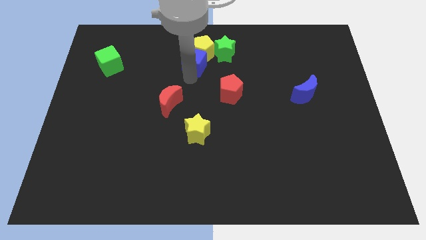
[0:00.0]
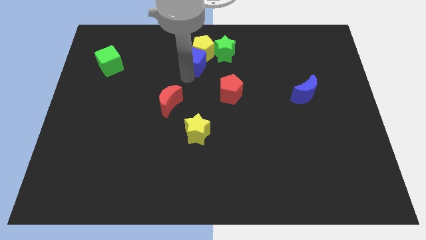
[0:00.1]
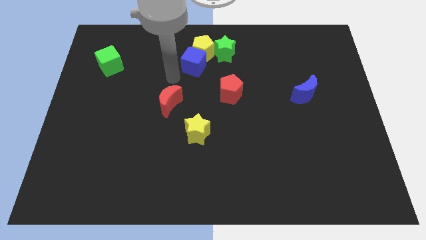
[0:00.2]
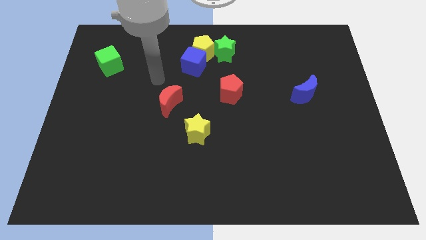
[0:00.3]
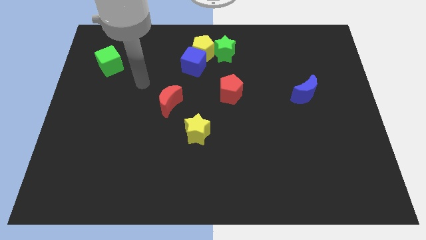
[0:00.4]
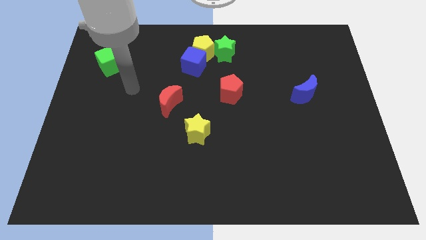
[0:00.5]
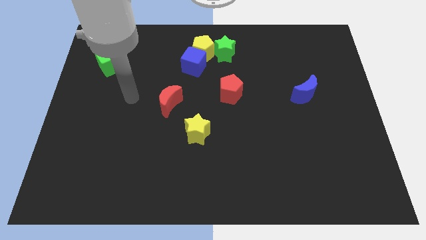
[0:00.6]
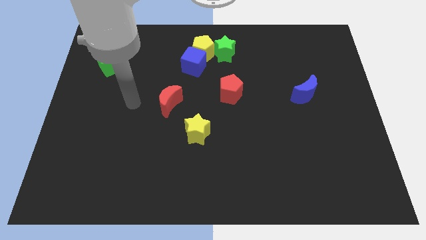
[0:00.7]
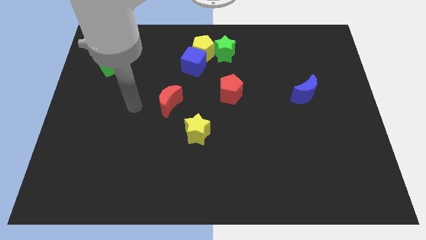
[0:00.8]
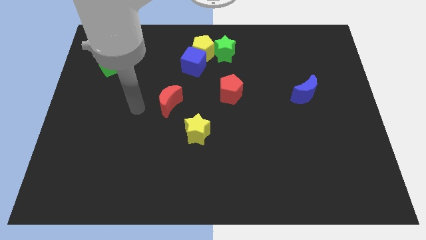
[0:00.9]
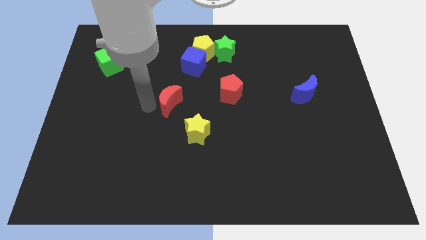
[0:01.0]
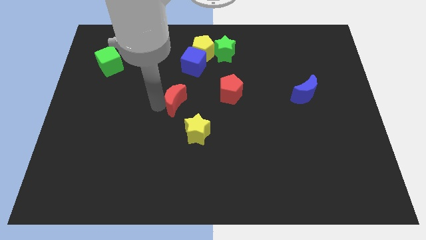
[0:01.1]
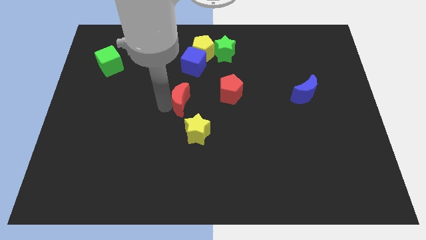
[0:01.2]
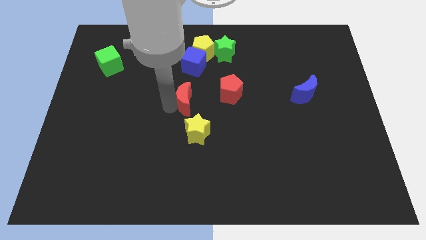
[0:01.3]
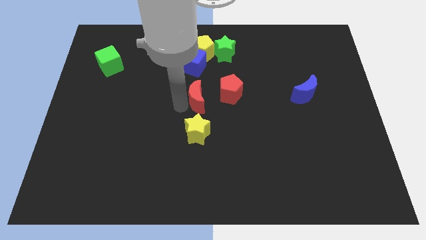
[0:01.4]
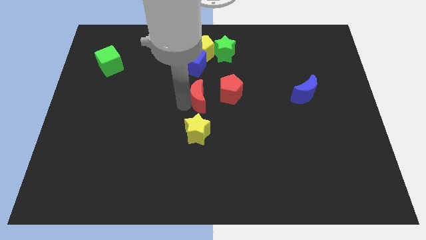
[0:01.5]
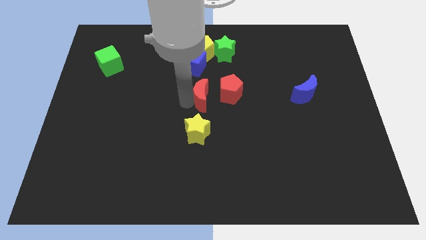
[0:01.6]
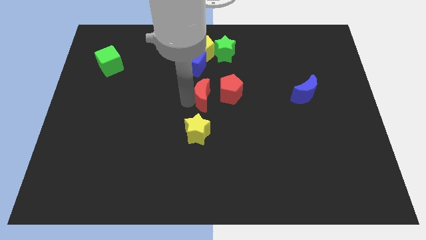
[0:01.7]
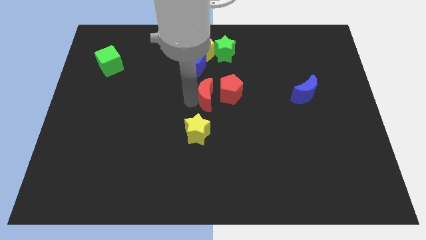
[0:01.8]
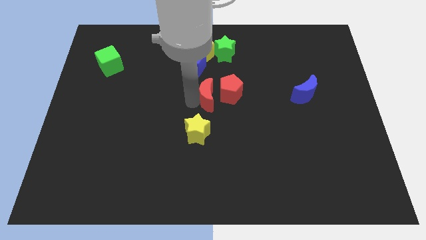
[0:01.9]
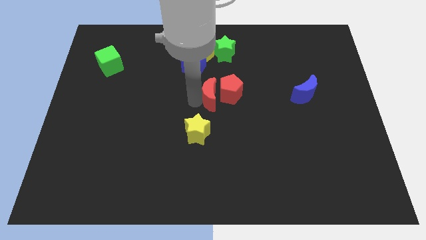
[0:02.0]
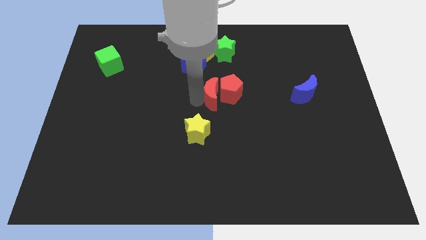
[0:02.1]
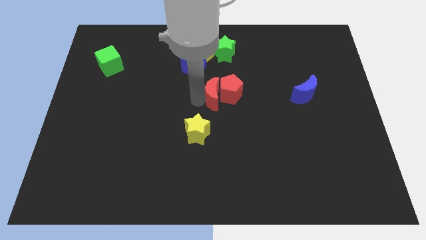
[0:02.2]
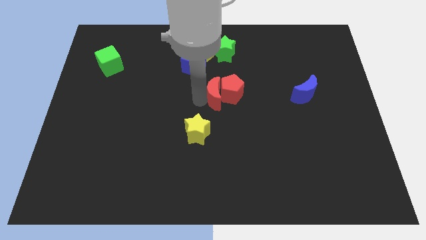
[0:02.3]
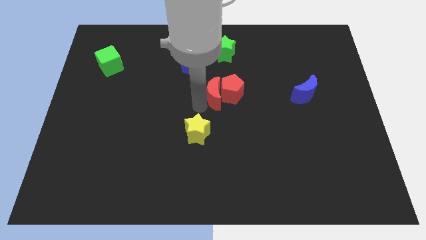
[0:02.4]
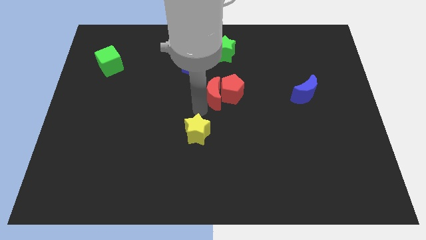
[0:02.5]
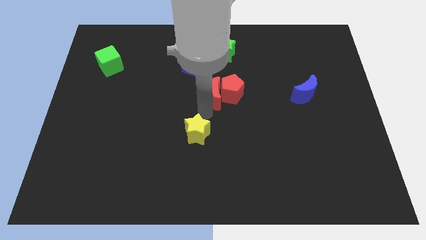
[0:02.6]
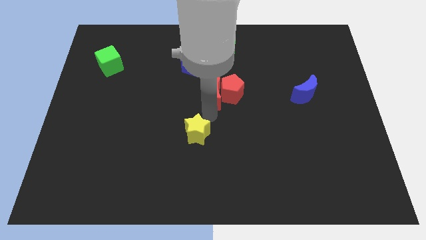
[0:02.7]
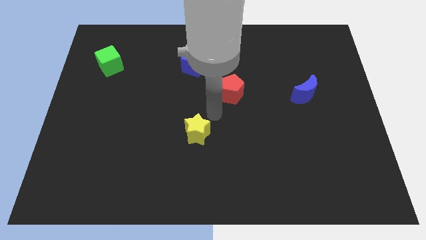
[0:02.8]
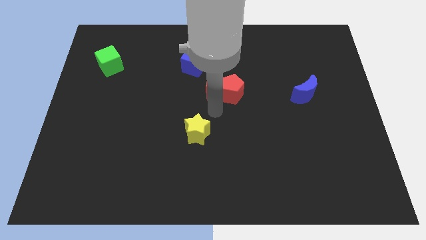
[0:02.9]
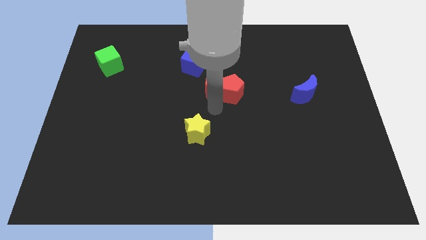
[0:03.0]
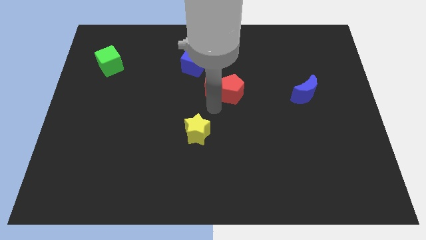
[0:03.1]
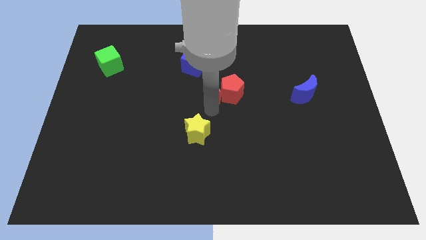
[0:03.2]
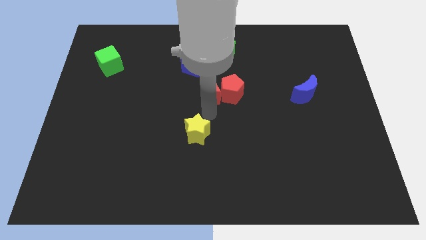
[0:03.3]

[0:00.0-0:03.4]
push the red crescent into the red pentagon

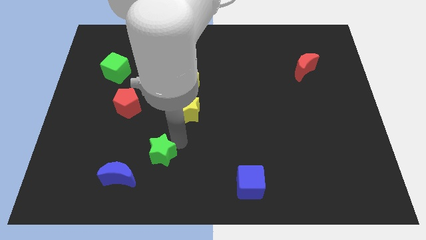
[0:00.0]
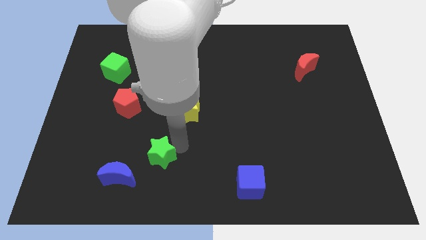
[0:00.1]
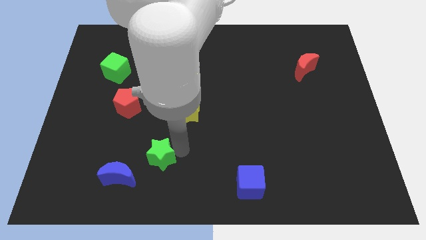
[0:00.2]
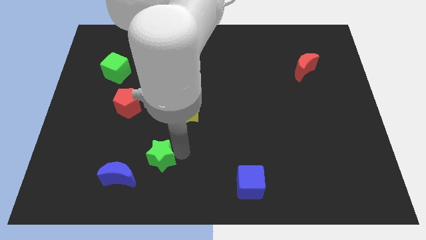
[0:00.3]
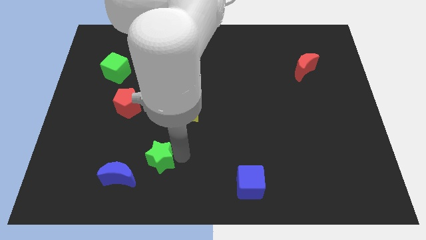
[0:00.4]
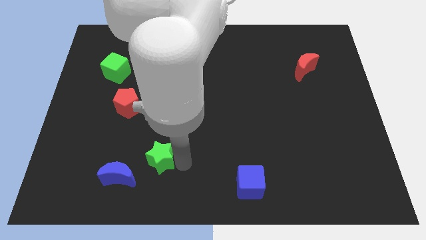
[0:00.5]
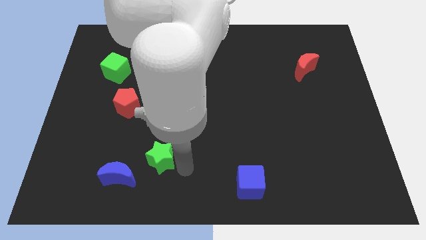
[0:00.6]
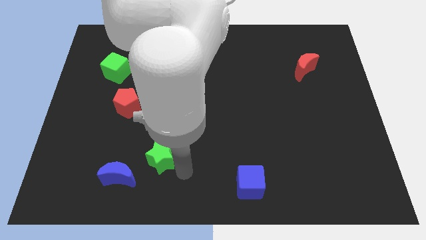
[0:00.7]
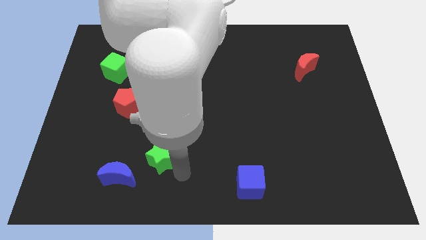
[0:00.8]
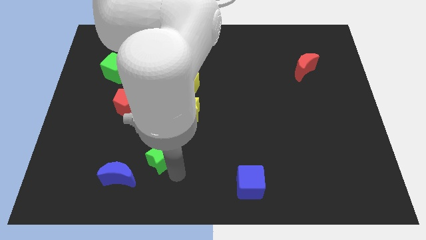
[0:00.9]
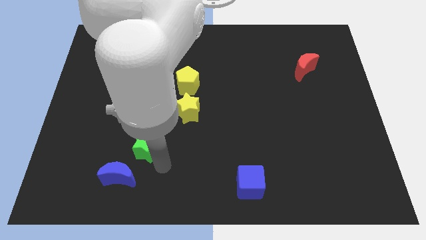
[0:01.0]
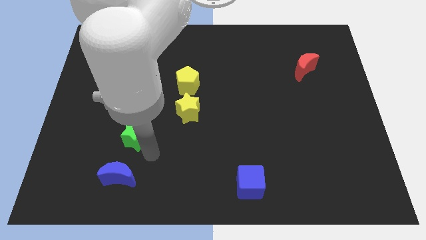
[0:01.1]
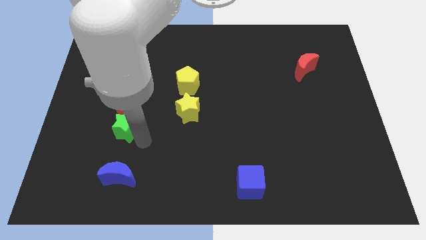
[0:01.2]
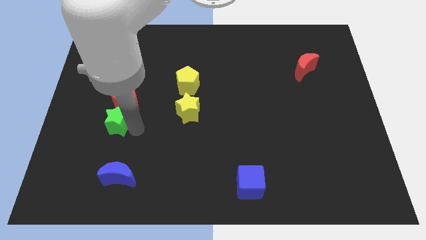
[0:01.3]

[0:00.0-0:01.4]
place green star to the bottom of red pentagon

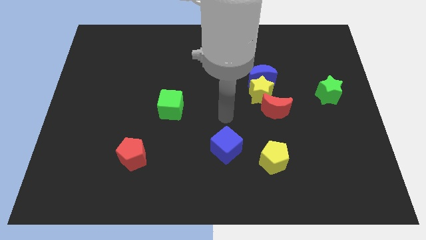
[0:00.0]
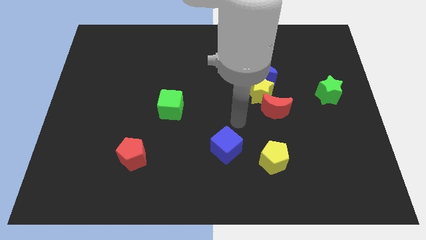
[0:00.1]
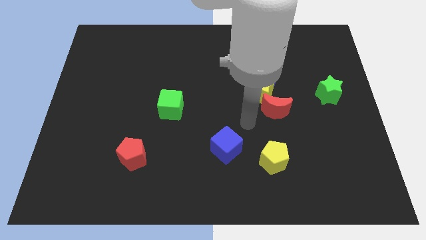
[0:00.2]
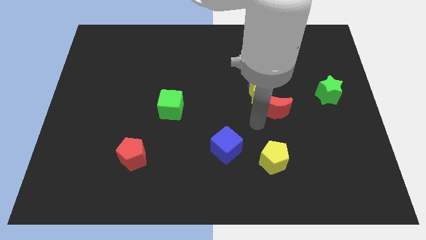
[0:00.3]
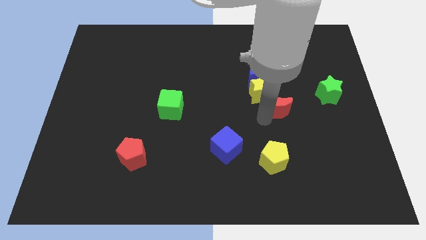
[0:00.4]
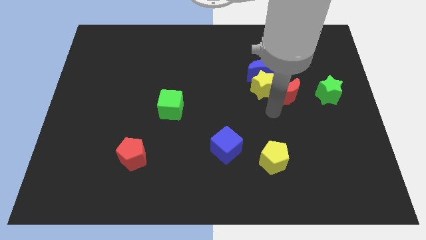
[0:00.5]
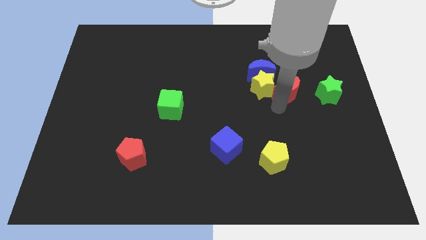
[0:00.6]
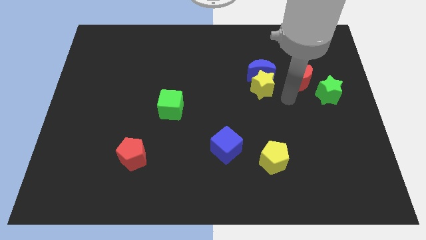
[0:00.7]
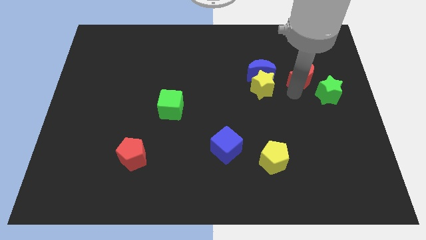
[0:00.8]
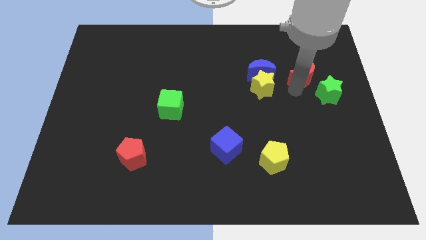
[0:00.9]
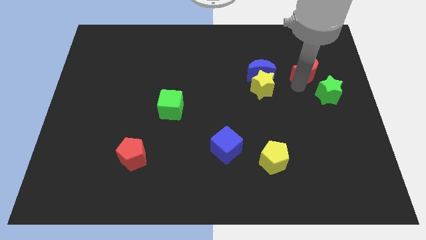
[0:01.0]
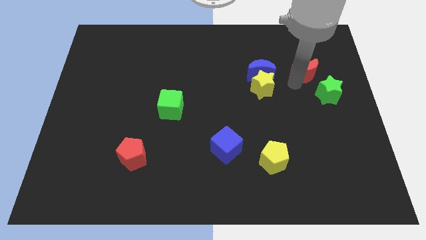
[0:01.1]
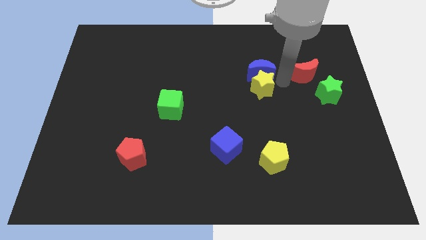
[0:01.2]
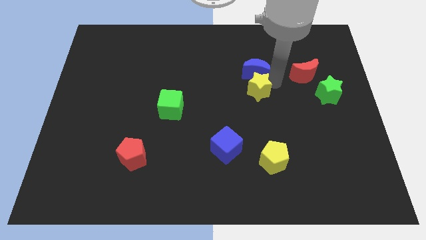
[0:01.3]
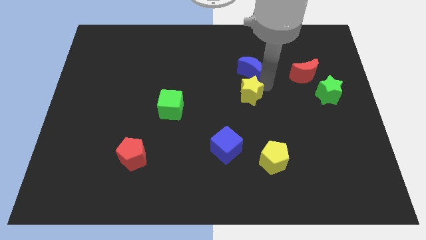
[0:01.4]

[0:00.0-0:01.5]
separate red crescent from the yellow star

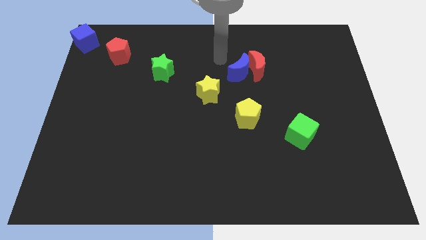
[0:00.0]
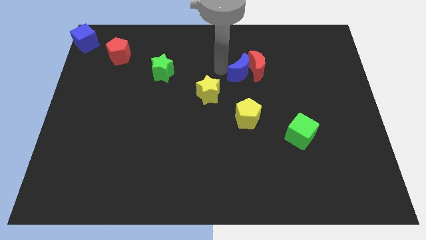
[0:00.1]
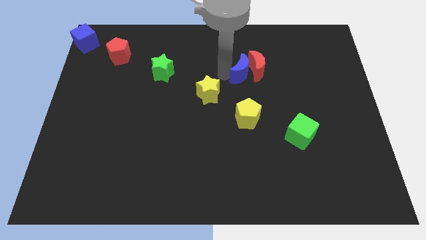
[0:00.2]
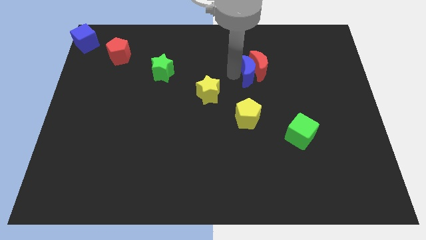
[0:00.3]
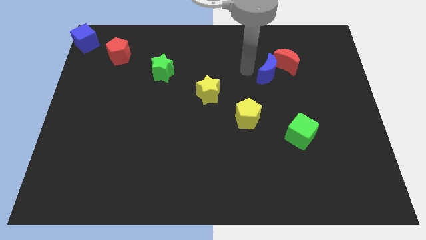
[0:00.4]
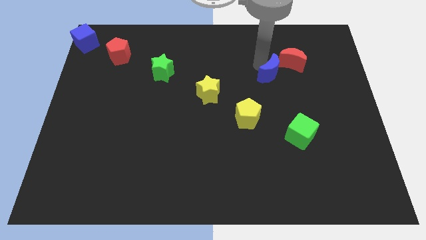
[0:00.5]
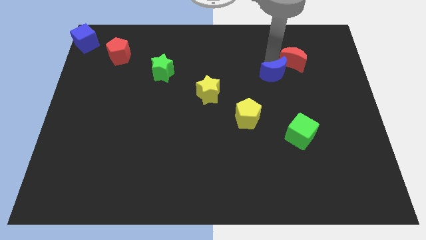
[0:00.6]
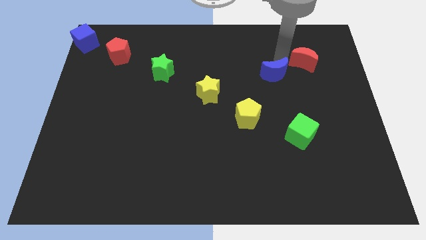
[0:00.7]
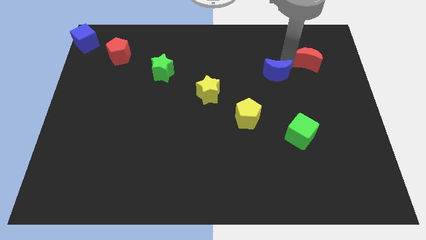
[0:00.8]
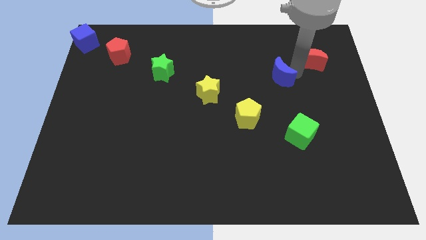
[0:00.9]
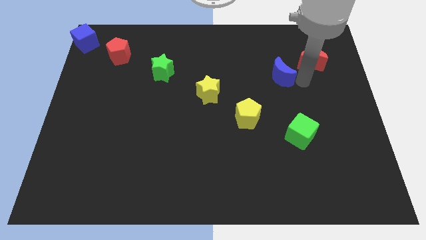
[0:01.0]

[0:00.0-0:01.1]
separate the blue and red crescents

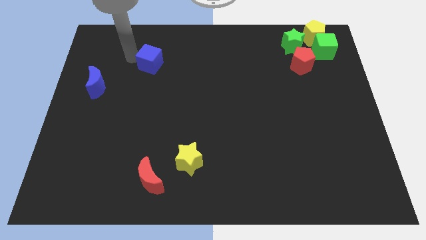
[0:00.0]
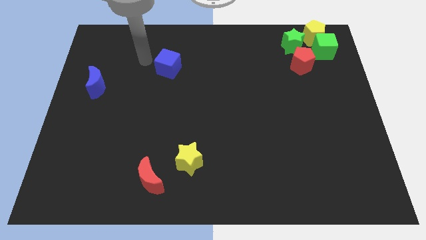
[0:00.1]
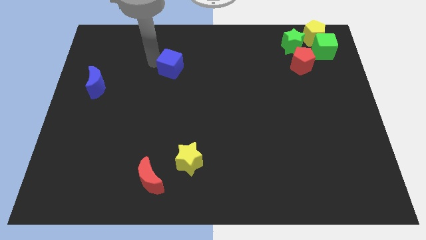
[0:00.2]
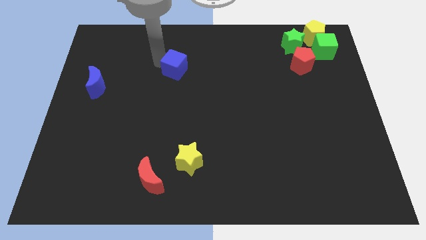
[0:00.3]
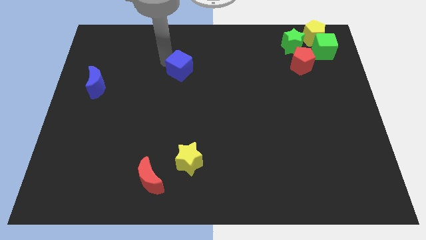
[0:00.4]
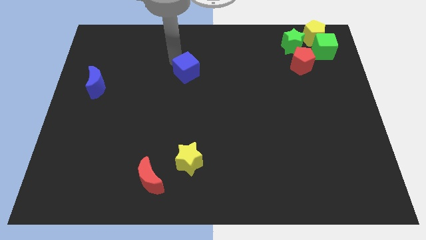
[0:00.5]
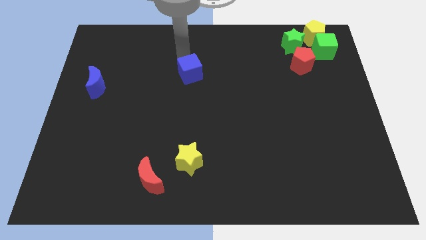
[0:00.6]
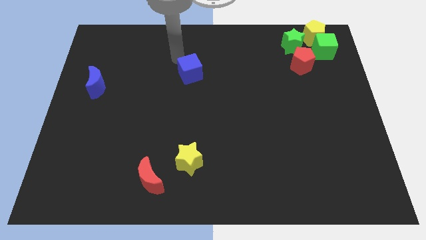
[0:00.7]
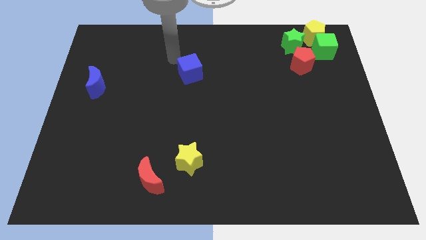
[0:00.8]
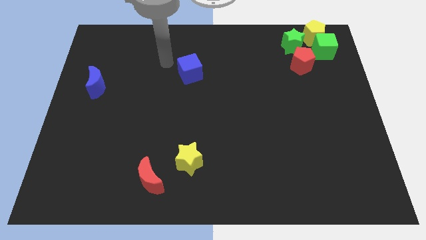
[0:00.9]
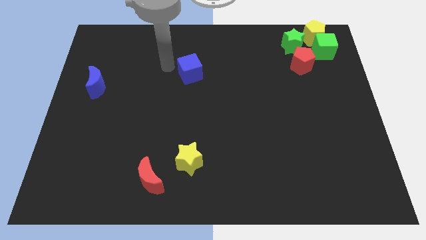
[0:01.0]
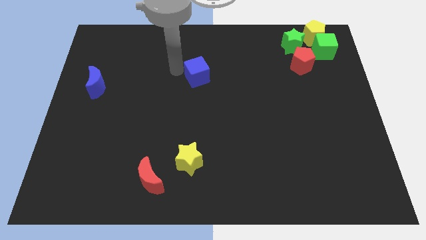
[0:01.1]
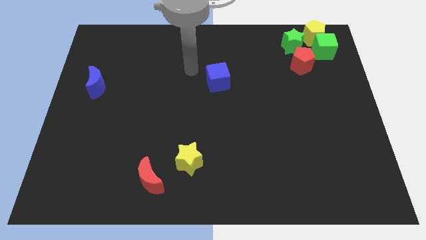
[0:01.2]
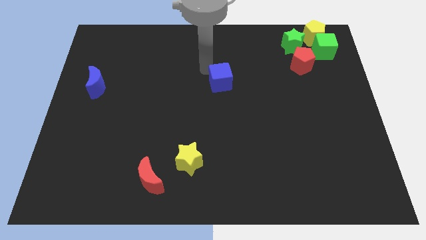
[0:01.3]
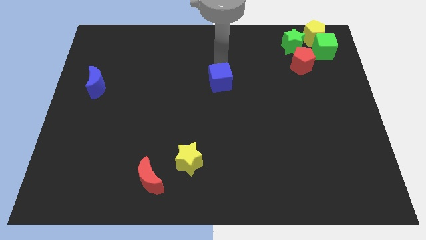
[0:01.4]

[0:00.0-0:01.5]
push the blue cube towards the center of the board
